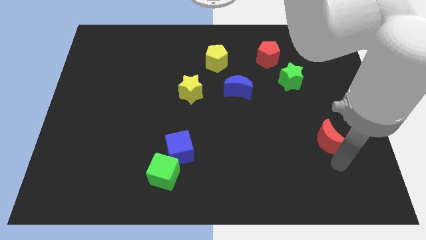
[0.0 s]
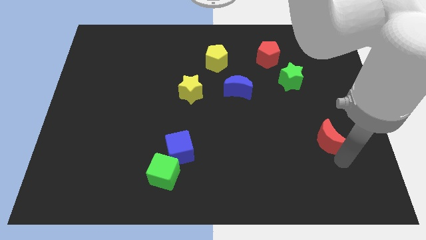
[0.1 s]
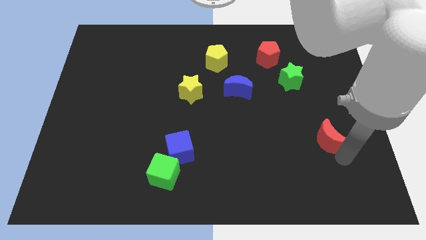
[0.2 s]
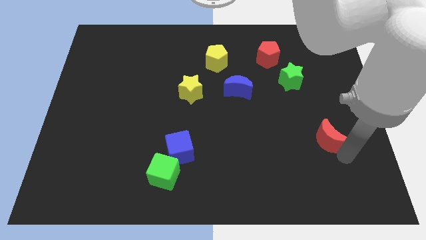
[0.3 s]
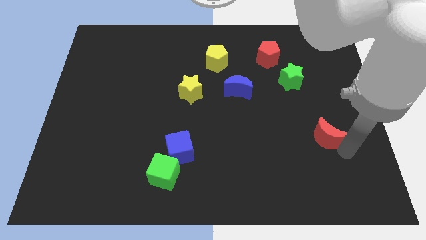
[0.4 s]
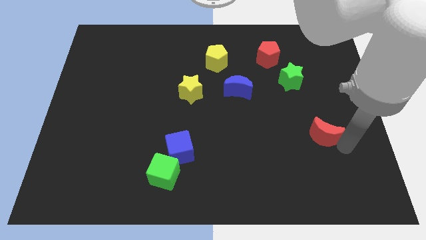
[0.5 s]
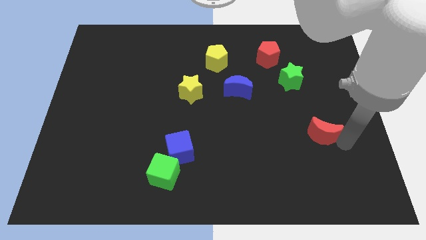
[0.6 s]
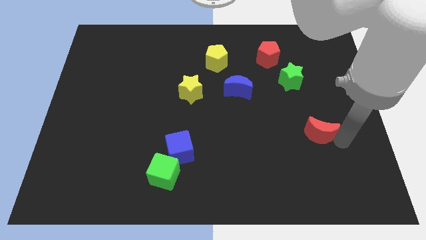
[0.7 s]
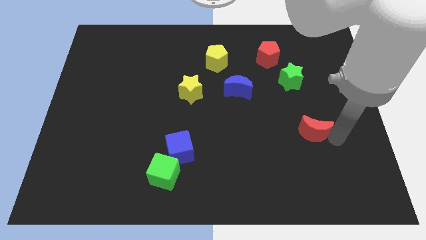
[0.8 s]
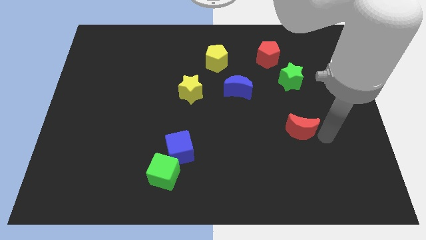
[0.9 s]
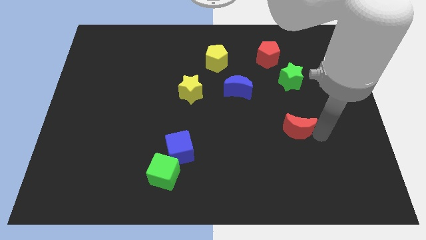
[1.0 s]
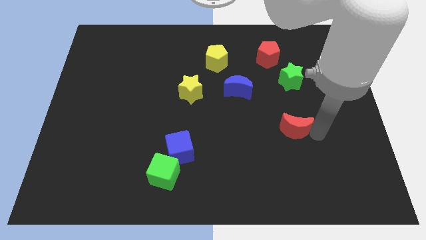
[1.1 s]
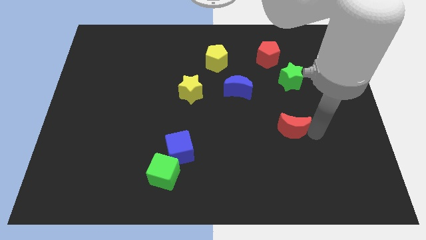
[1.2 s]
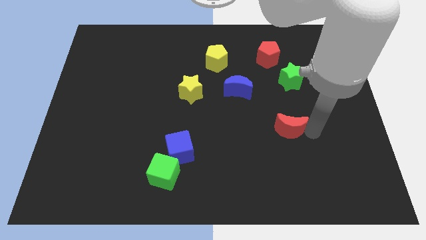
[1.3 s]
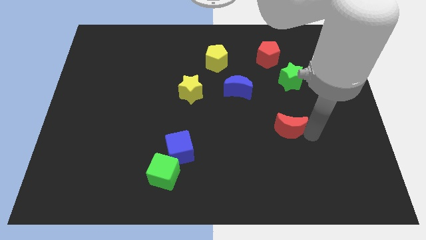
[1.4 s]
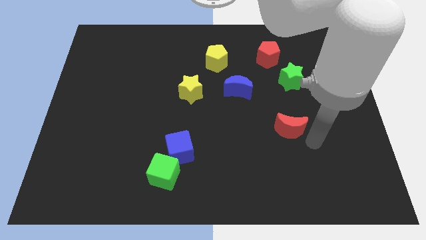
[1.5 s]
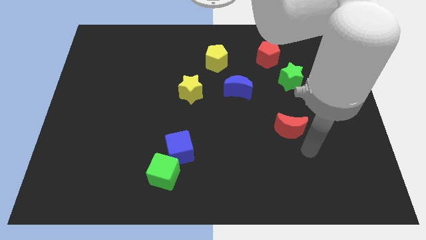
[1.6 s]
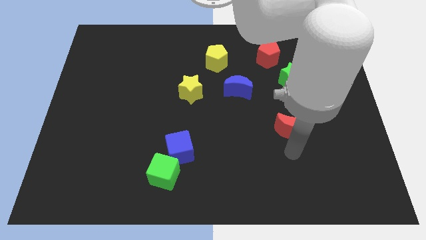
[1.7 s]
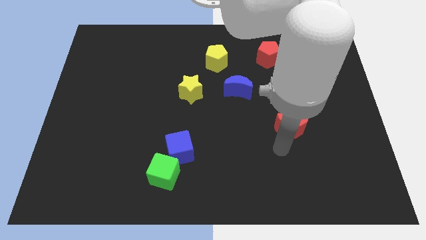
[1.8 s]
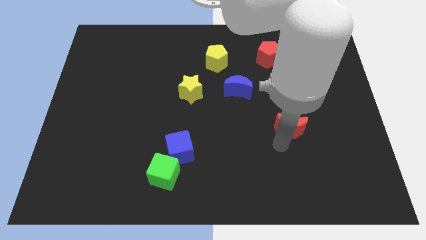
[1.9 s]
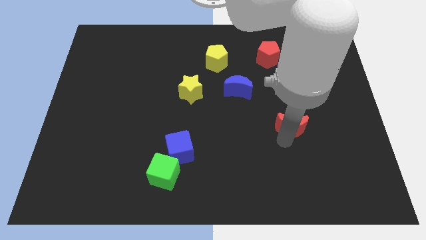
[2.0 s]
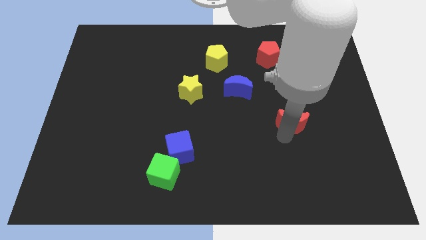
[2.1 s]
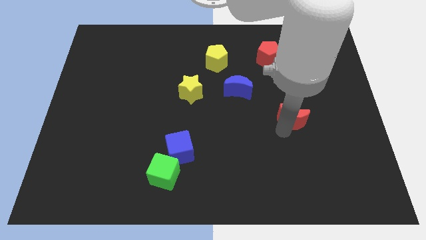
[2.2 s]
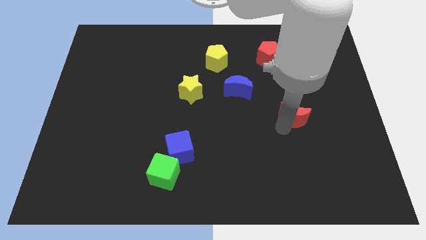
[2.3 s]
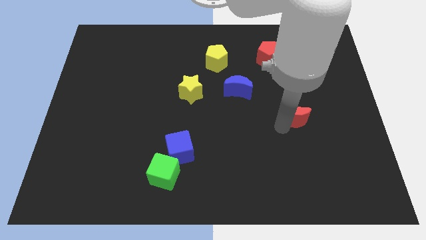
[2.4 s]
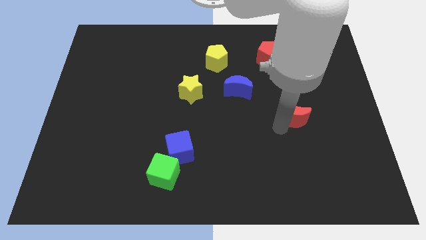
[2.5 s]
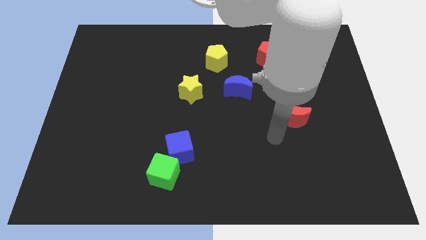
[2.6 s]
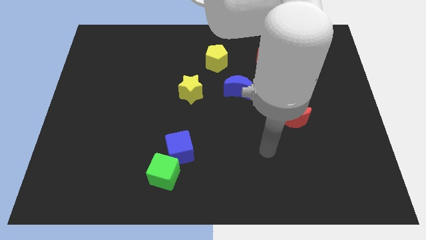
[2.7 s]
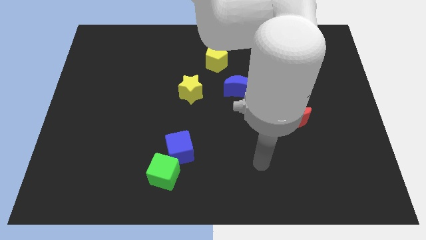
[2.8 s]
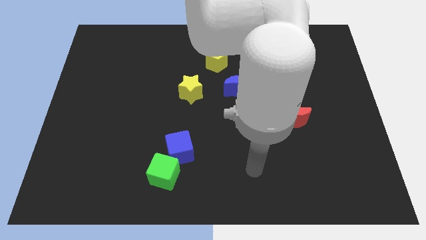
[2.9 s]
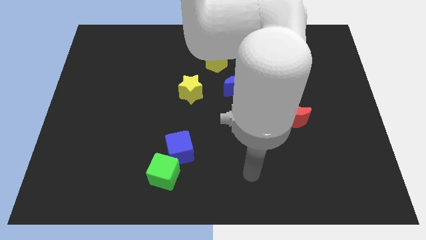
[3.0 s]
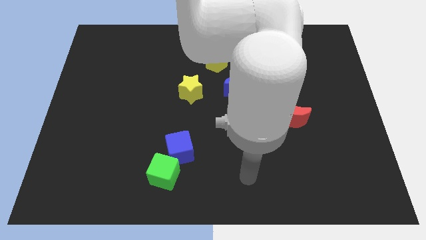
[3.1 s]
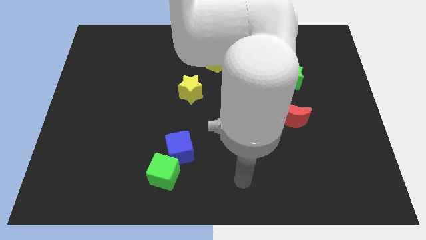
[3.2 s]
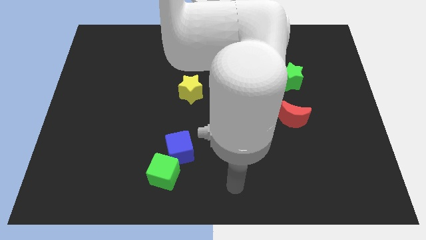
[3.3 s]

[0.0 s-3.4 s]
move the red crescent to the bottom of the green star

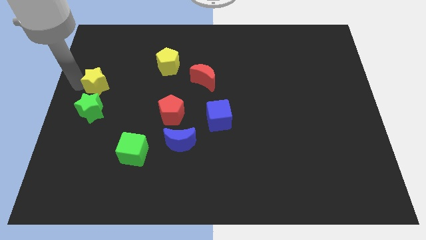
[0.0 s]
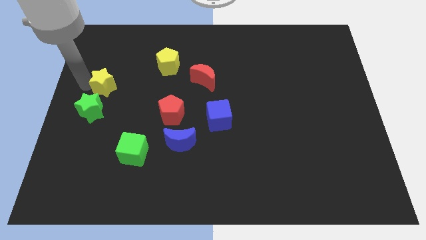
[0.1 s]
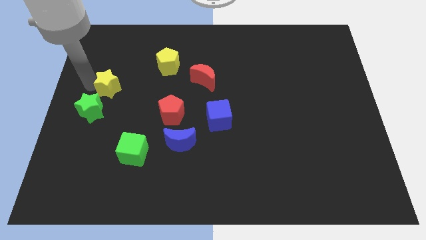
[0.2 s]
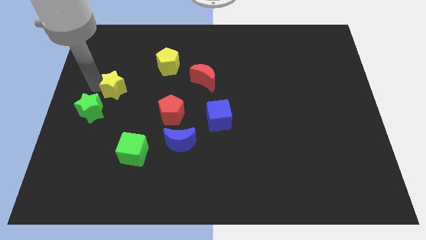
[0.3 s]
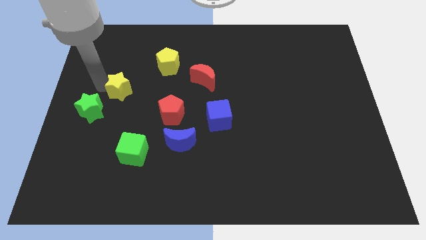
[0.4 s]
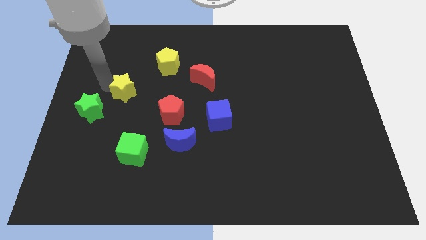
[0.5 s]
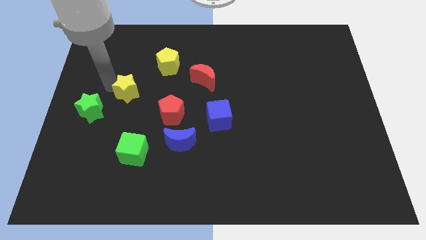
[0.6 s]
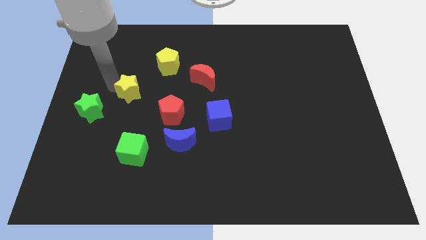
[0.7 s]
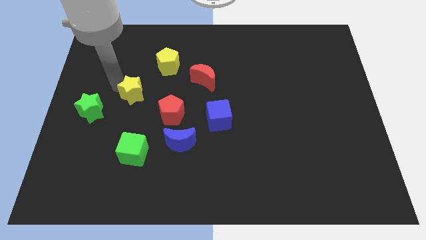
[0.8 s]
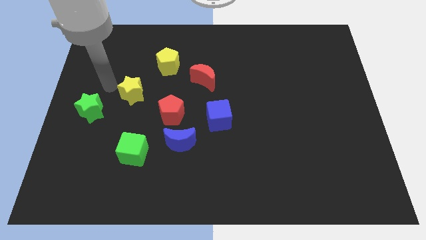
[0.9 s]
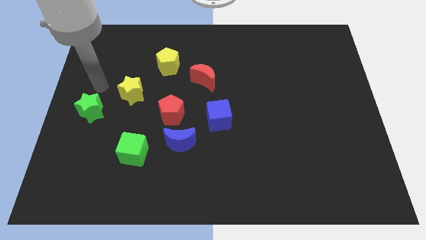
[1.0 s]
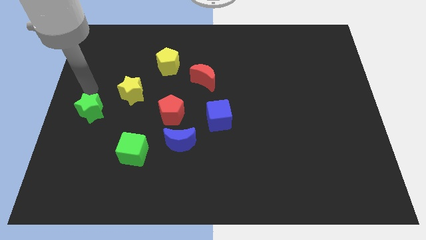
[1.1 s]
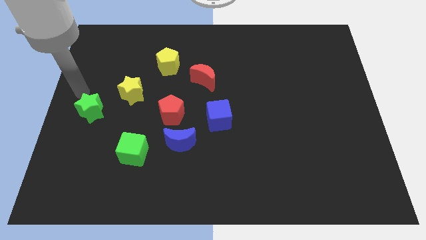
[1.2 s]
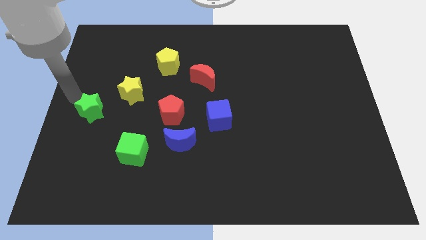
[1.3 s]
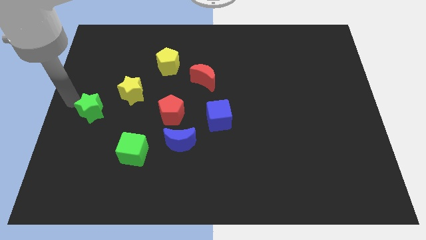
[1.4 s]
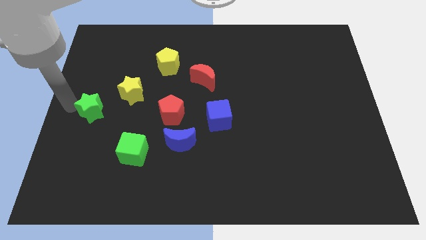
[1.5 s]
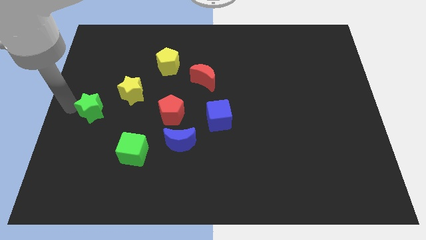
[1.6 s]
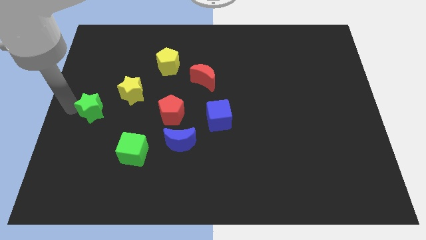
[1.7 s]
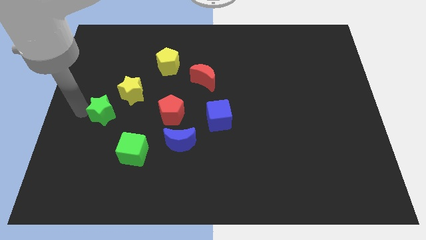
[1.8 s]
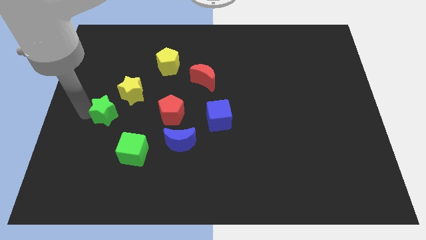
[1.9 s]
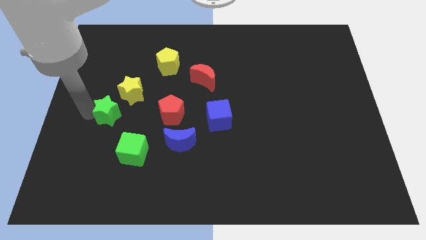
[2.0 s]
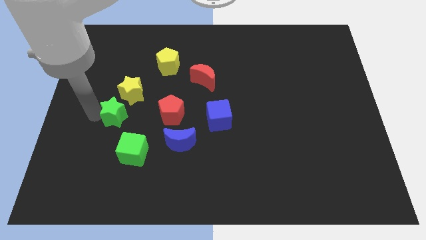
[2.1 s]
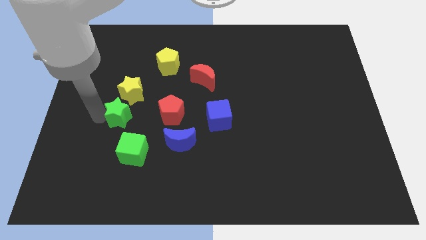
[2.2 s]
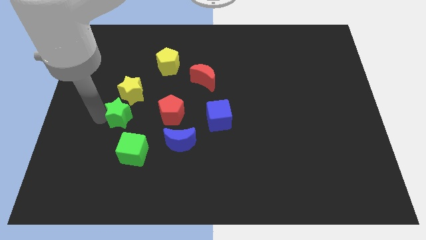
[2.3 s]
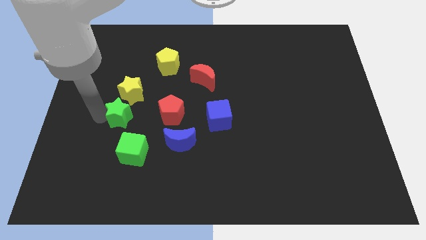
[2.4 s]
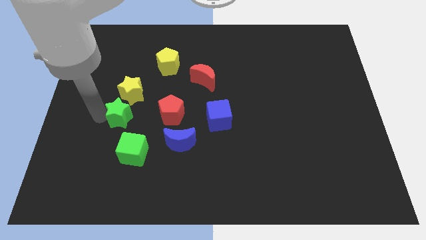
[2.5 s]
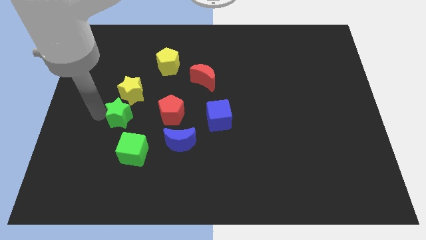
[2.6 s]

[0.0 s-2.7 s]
push the yellow star and green star towards the red pentagon

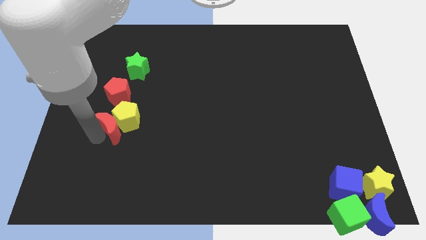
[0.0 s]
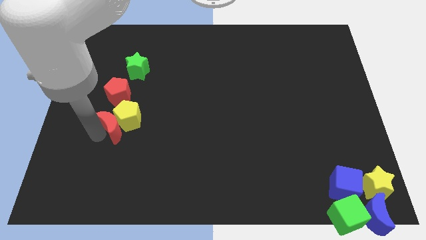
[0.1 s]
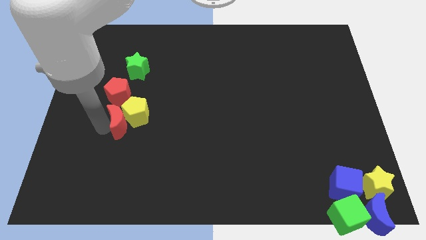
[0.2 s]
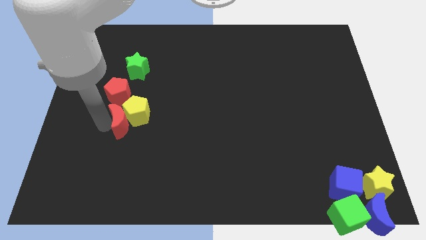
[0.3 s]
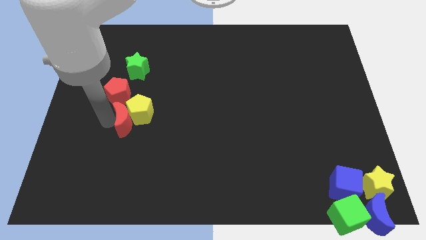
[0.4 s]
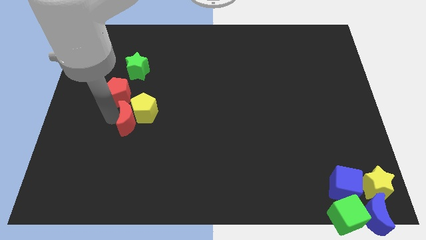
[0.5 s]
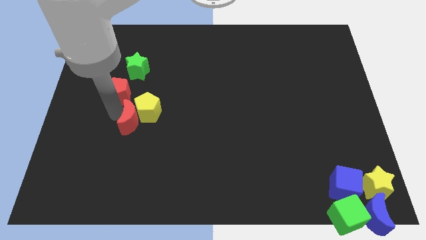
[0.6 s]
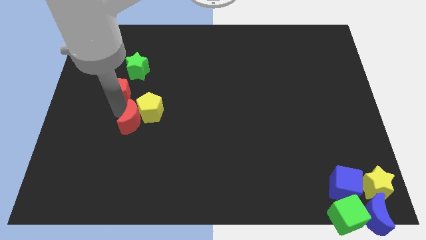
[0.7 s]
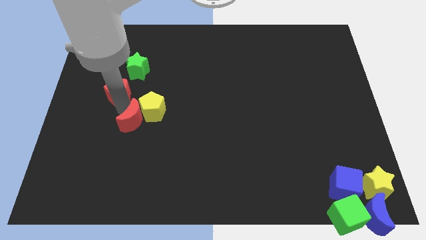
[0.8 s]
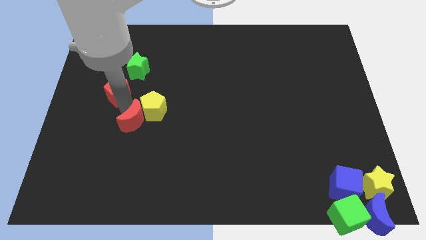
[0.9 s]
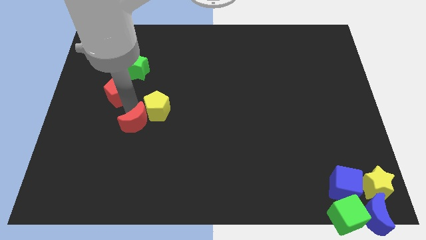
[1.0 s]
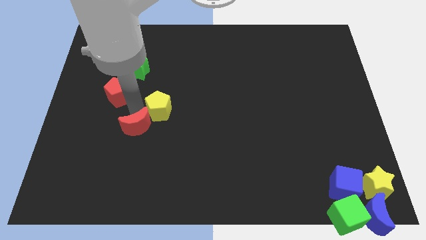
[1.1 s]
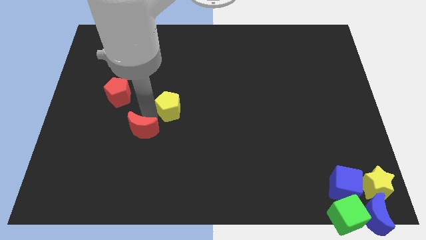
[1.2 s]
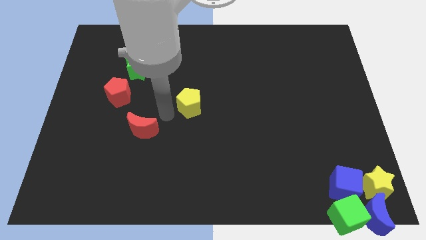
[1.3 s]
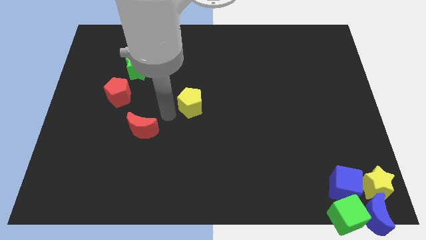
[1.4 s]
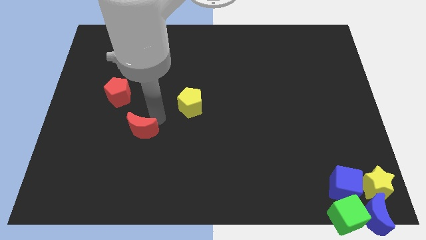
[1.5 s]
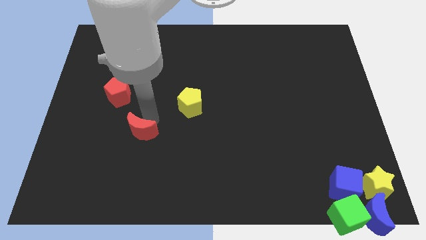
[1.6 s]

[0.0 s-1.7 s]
separate red crescent and the yellow pentagon

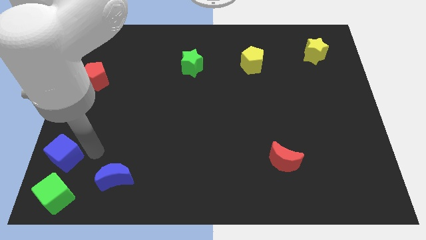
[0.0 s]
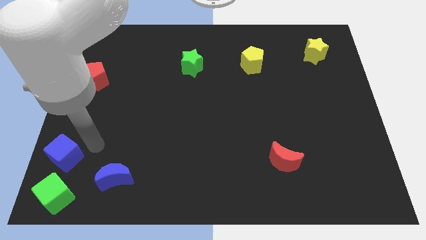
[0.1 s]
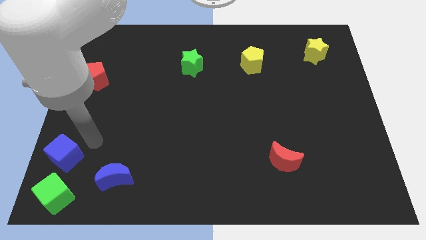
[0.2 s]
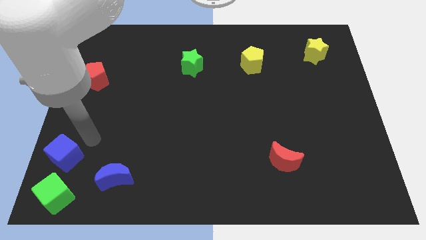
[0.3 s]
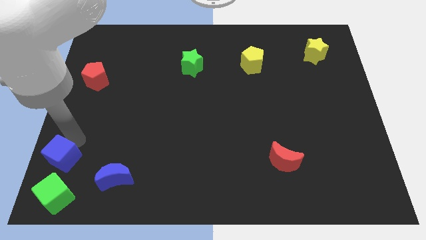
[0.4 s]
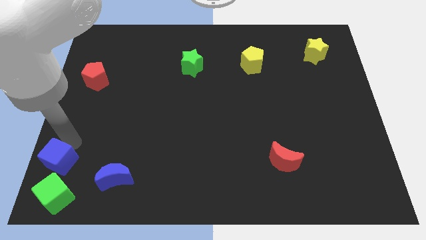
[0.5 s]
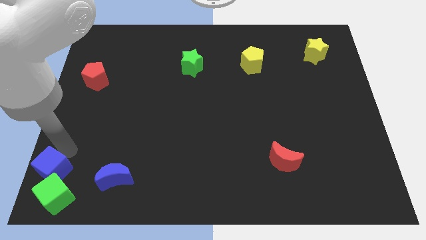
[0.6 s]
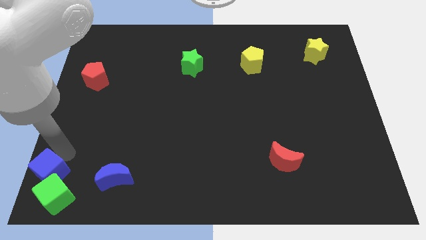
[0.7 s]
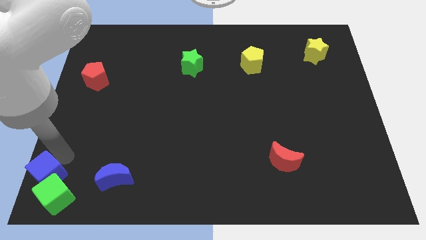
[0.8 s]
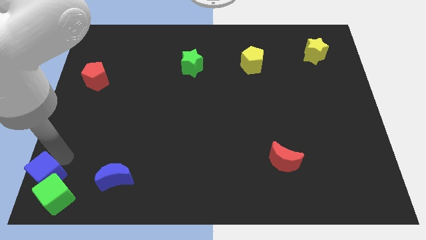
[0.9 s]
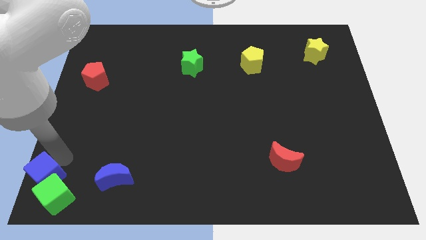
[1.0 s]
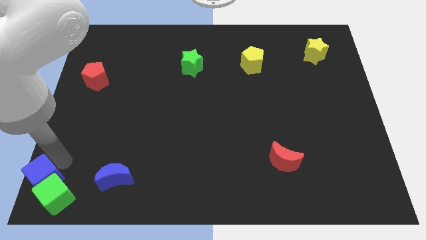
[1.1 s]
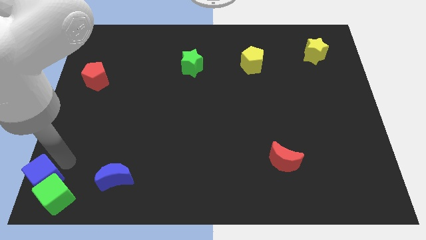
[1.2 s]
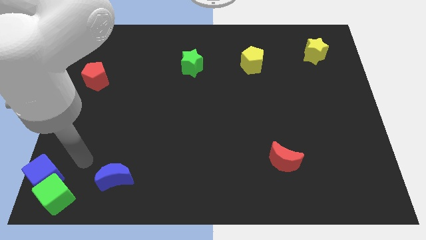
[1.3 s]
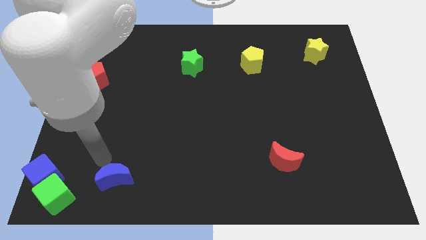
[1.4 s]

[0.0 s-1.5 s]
push the blue cube to the top left of the green cube
